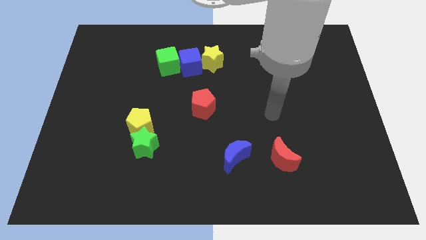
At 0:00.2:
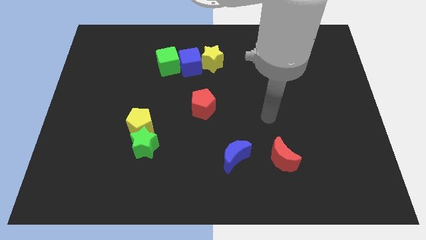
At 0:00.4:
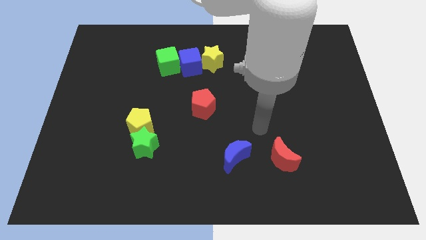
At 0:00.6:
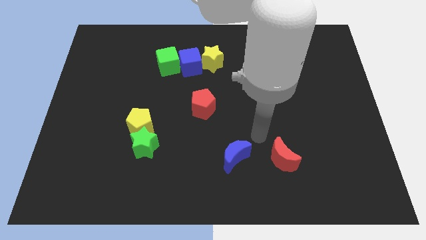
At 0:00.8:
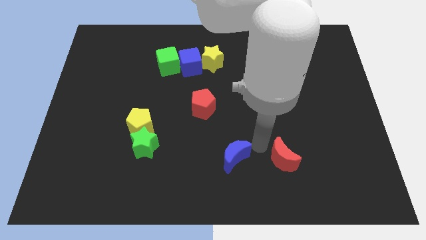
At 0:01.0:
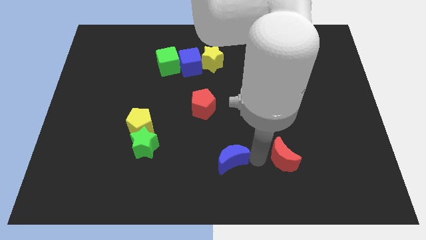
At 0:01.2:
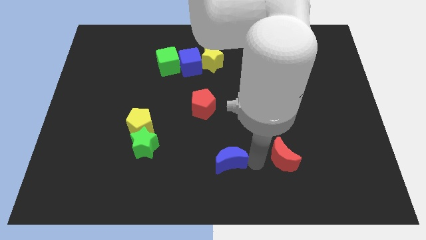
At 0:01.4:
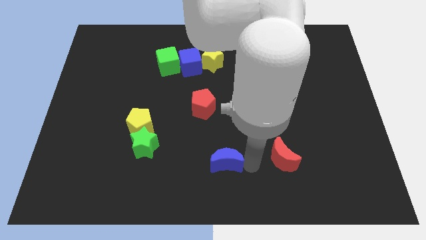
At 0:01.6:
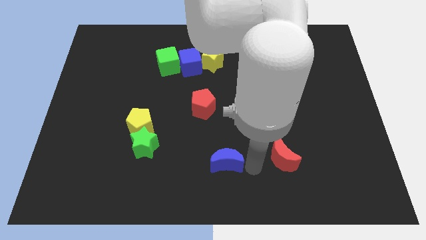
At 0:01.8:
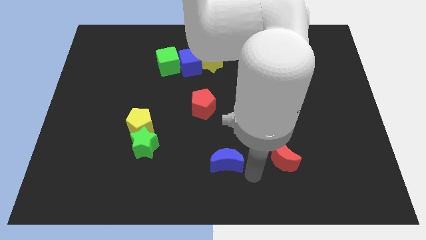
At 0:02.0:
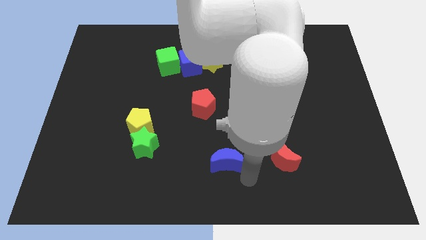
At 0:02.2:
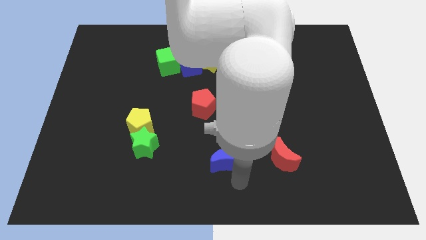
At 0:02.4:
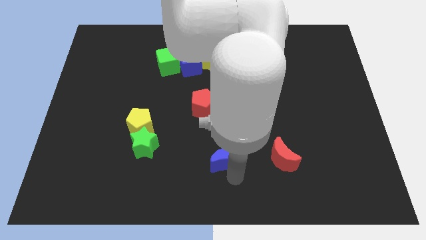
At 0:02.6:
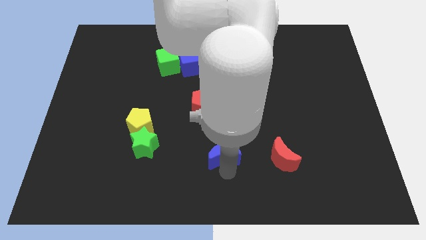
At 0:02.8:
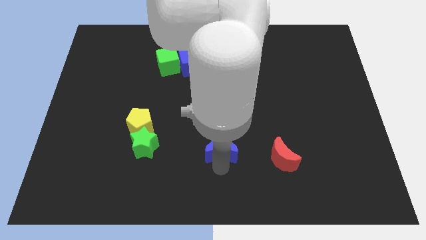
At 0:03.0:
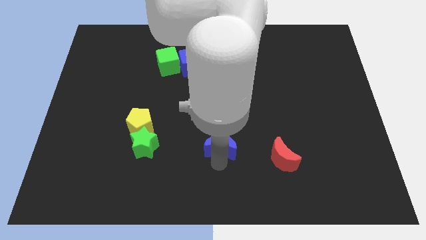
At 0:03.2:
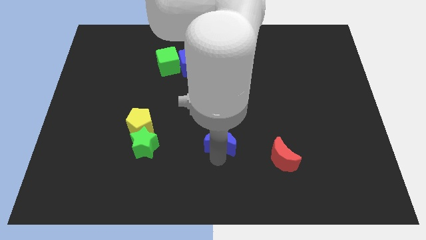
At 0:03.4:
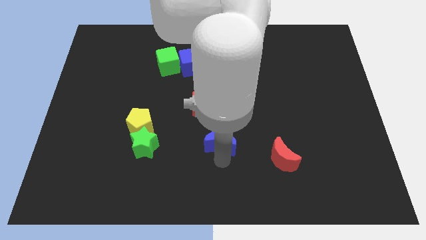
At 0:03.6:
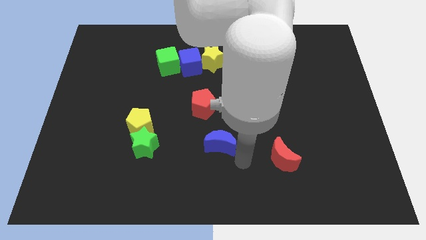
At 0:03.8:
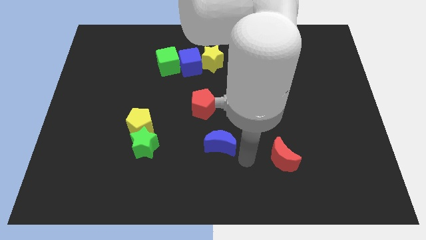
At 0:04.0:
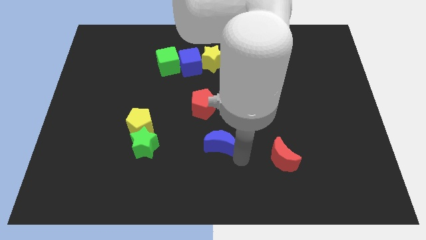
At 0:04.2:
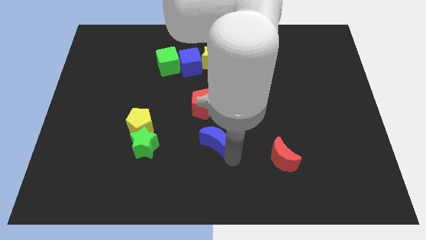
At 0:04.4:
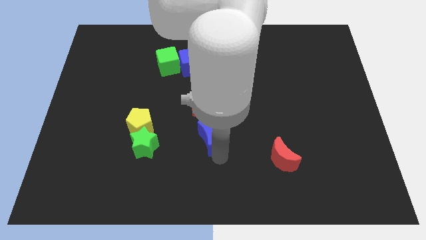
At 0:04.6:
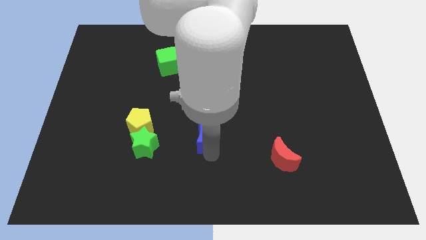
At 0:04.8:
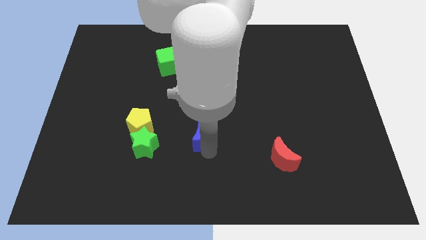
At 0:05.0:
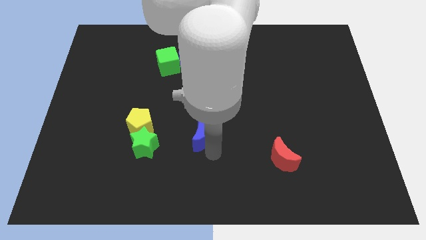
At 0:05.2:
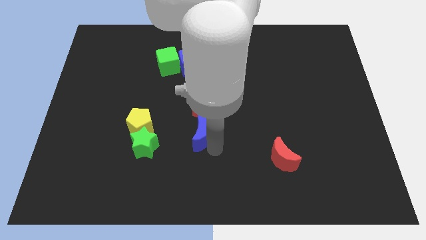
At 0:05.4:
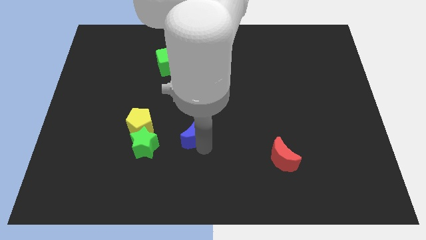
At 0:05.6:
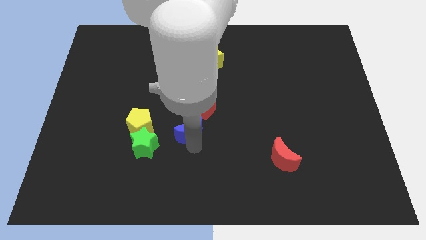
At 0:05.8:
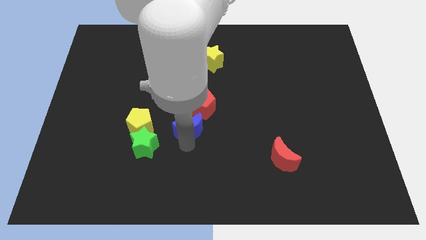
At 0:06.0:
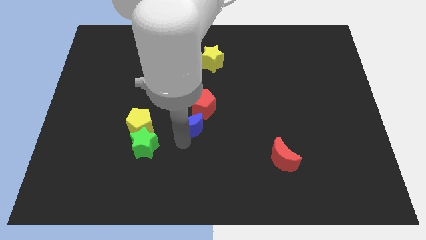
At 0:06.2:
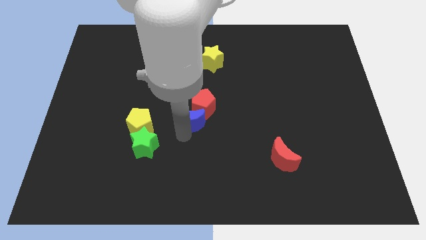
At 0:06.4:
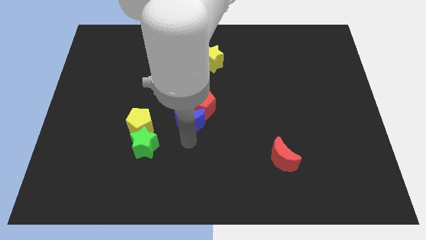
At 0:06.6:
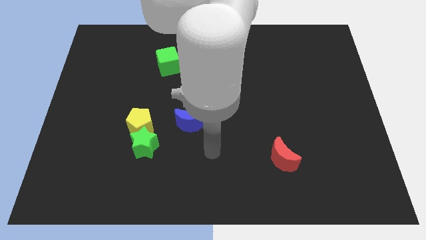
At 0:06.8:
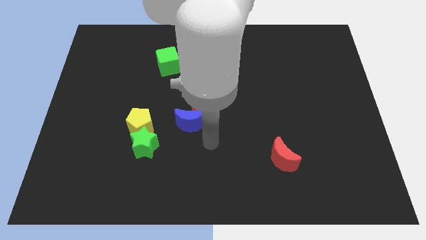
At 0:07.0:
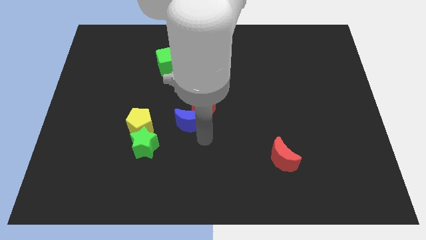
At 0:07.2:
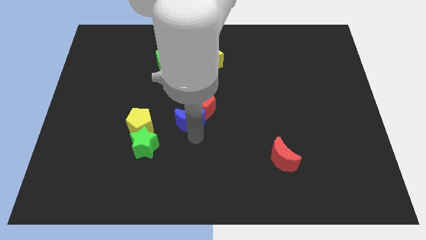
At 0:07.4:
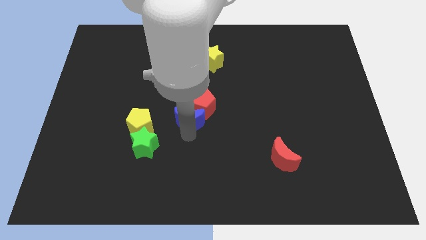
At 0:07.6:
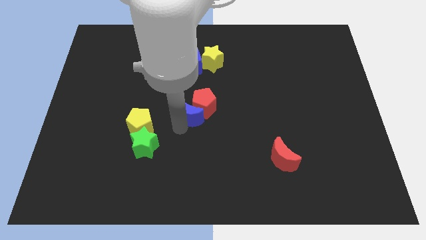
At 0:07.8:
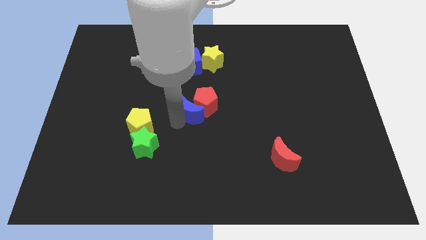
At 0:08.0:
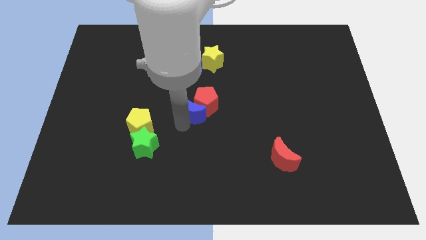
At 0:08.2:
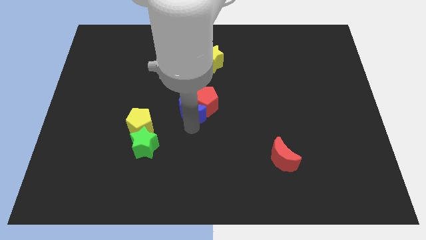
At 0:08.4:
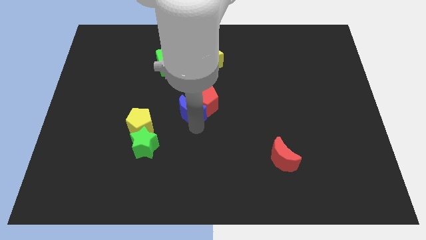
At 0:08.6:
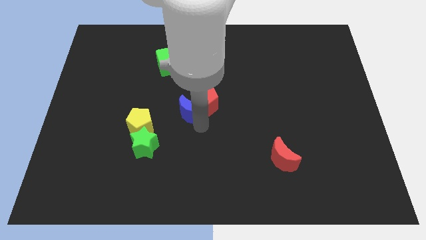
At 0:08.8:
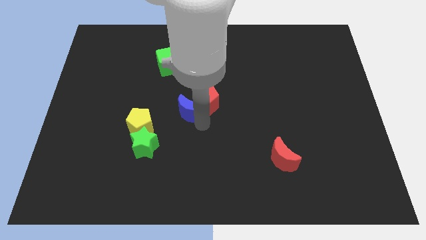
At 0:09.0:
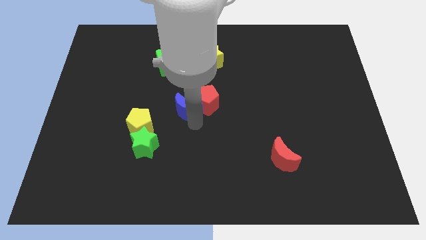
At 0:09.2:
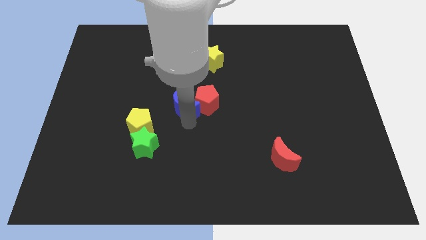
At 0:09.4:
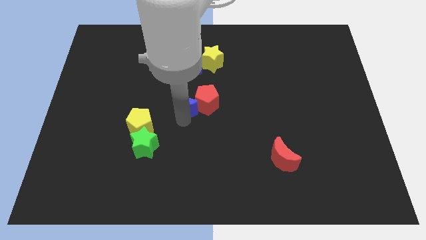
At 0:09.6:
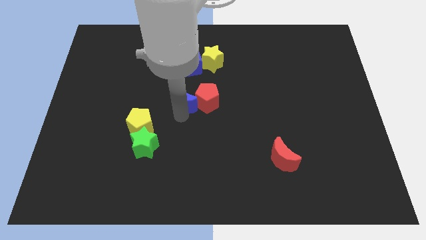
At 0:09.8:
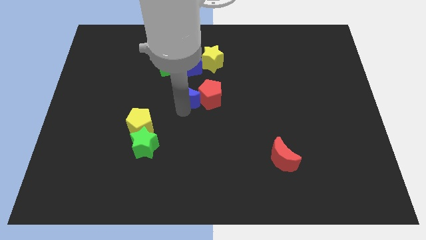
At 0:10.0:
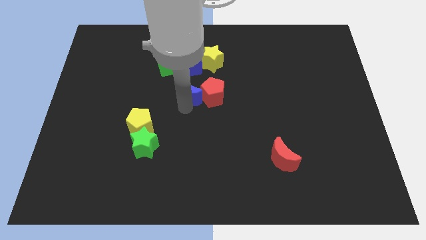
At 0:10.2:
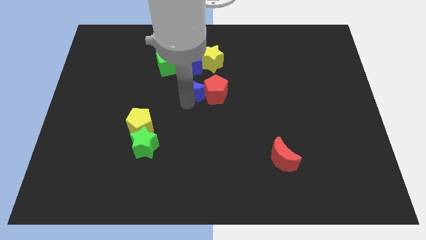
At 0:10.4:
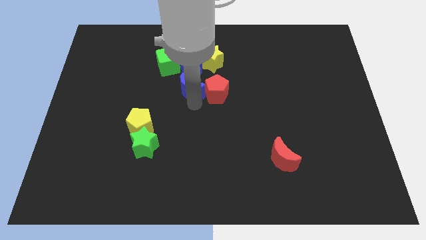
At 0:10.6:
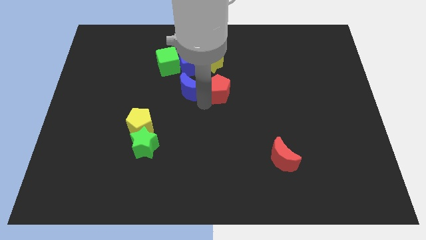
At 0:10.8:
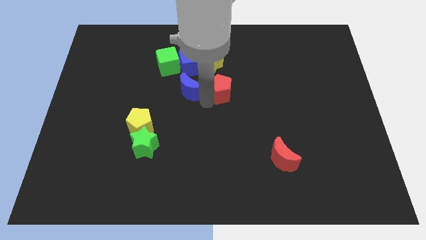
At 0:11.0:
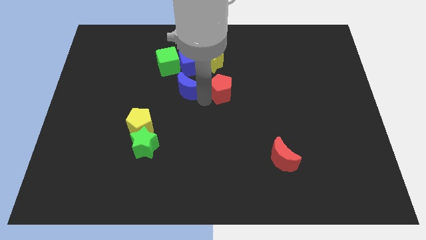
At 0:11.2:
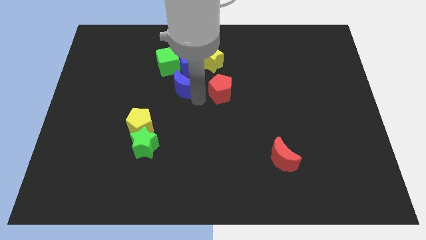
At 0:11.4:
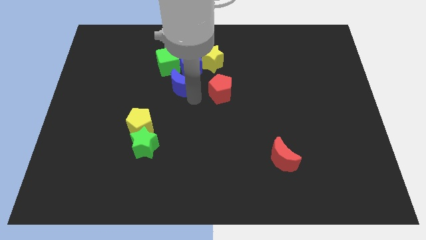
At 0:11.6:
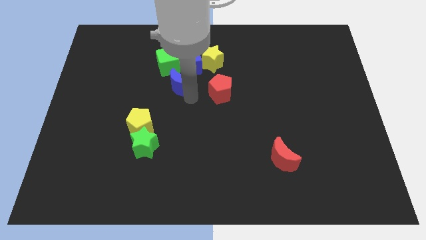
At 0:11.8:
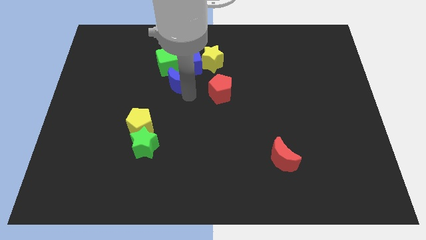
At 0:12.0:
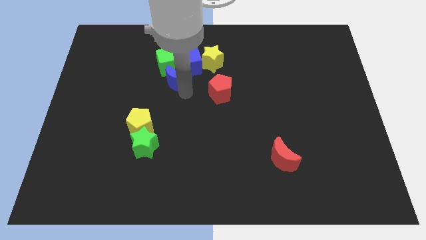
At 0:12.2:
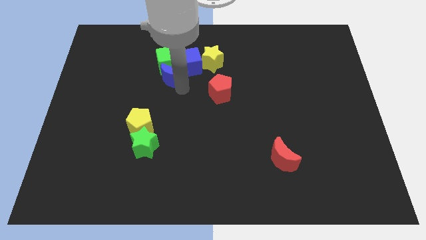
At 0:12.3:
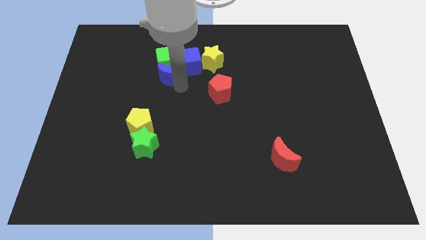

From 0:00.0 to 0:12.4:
put the blue moon next to the green cube

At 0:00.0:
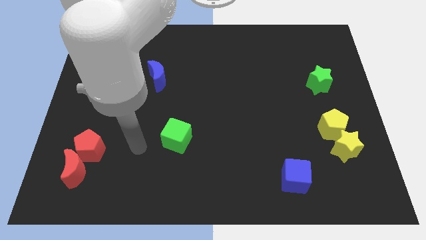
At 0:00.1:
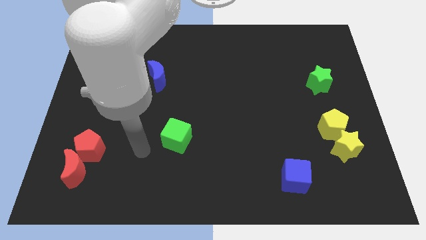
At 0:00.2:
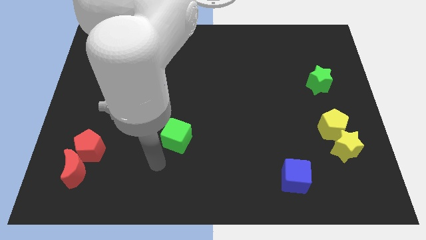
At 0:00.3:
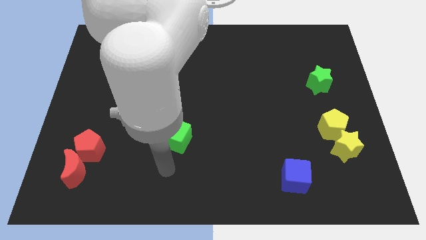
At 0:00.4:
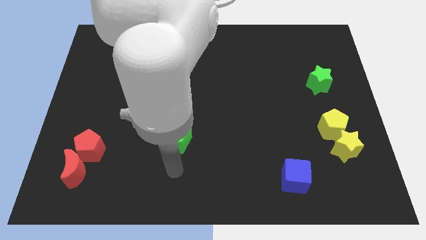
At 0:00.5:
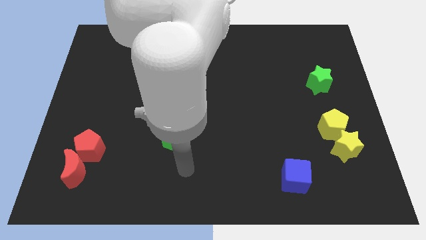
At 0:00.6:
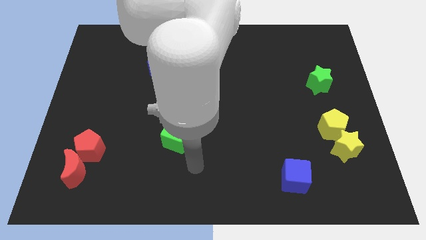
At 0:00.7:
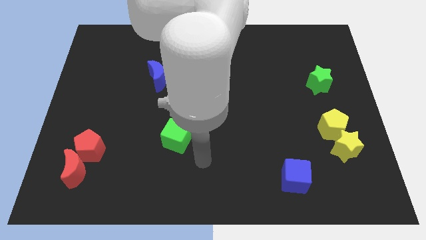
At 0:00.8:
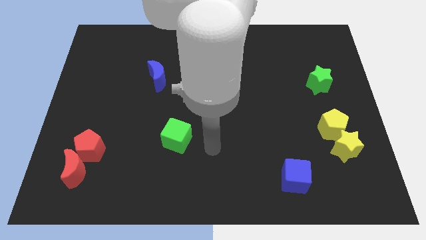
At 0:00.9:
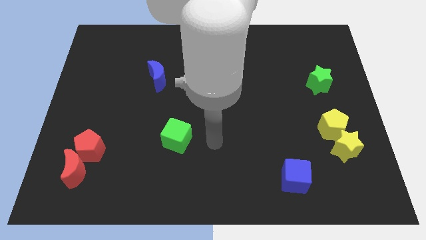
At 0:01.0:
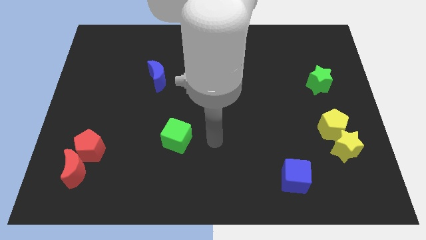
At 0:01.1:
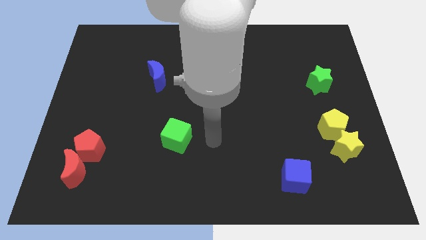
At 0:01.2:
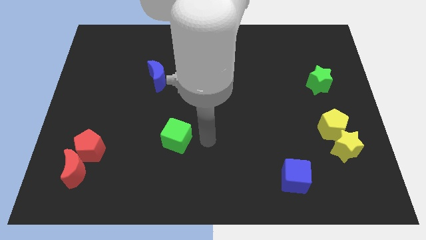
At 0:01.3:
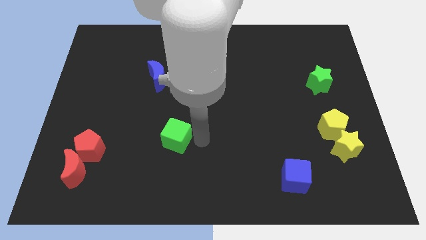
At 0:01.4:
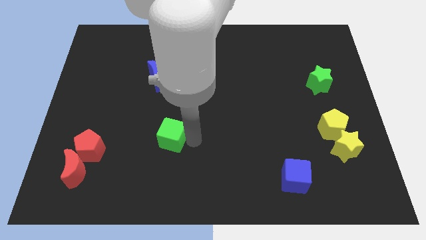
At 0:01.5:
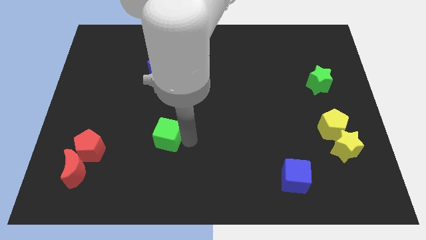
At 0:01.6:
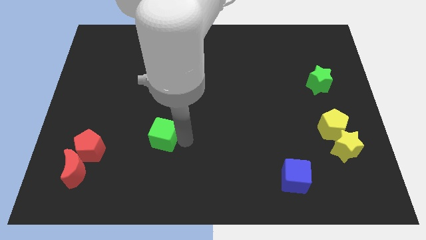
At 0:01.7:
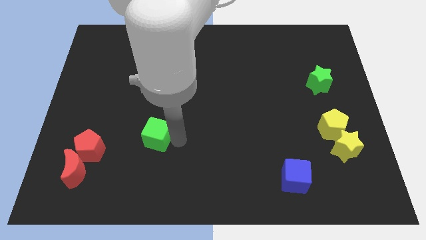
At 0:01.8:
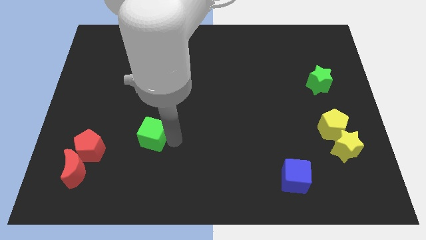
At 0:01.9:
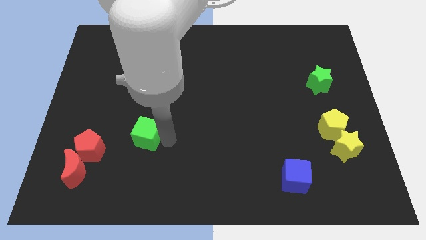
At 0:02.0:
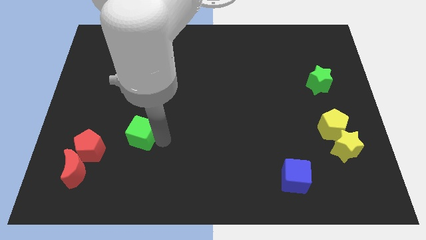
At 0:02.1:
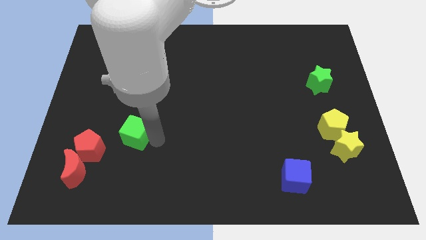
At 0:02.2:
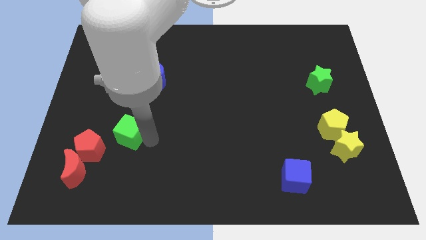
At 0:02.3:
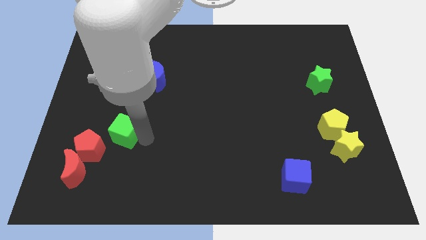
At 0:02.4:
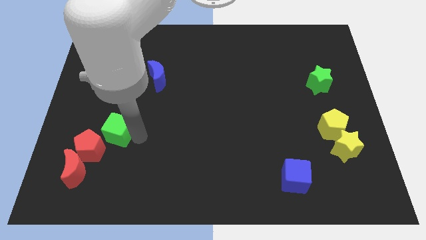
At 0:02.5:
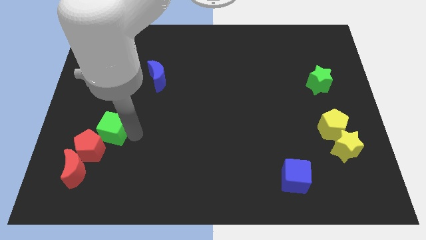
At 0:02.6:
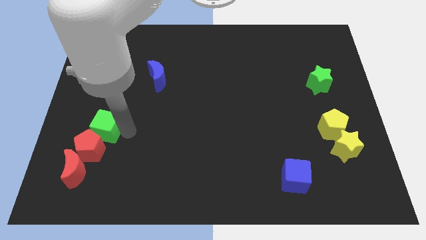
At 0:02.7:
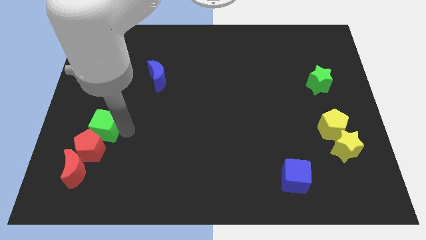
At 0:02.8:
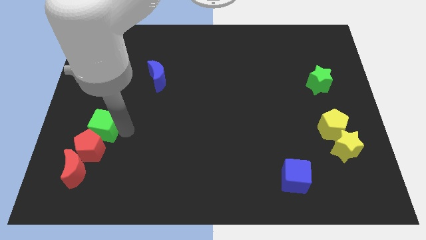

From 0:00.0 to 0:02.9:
push the green cube close to the red pentagon
